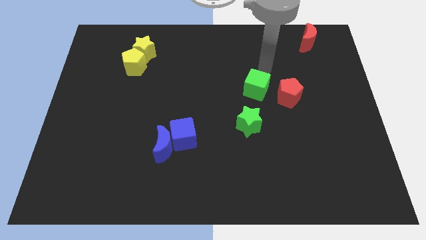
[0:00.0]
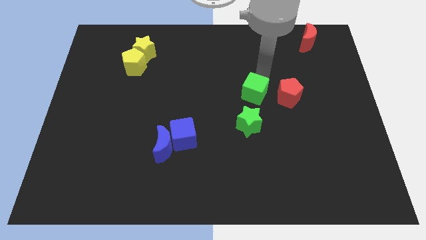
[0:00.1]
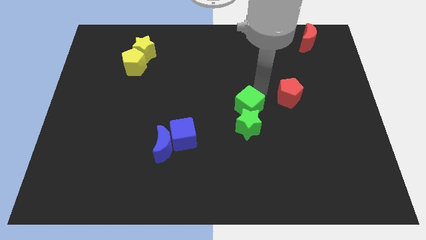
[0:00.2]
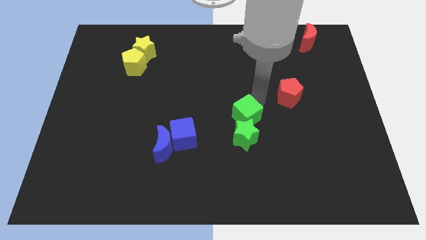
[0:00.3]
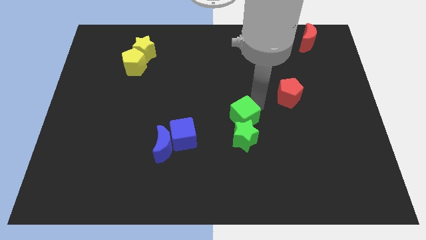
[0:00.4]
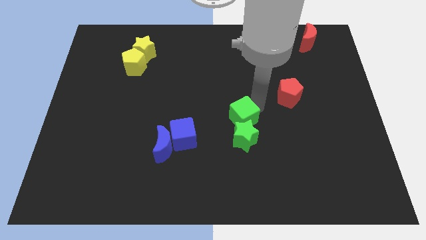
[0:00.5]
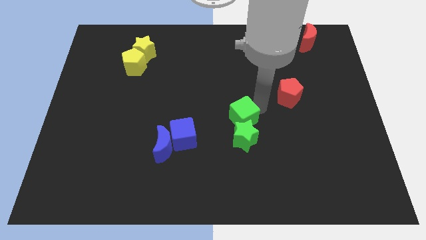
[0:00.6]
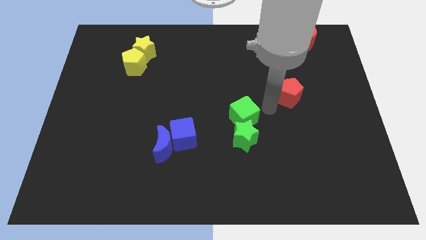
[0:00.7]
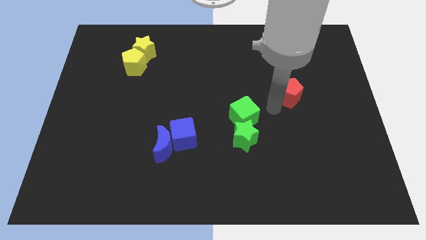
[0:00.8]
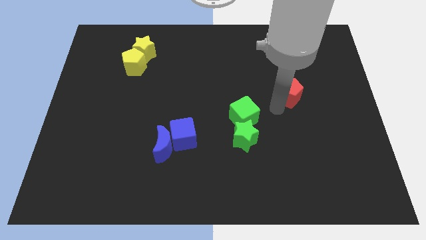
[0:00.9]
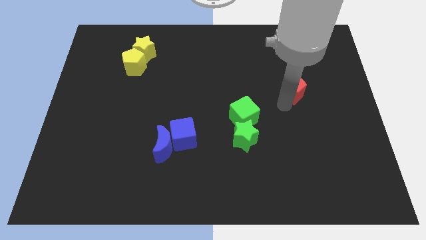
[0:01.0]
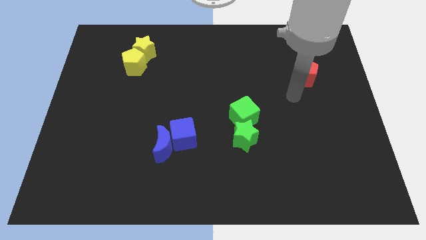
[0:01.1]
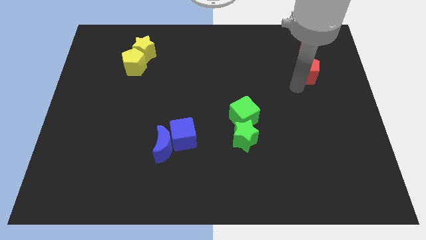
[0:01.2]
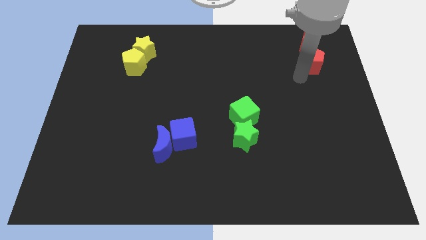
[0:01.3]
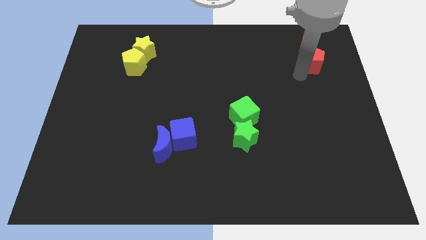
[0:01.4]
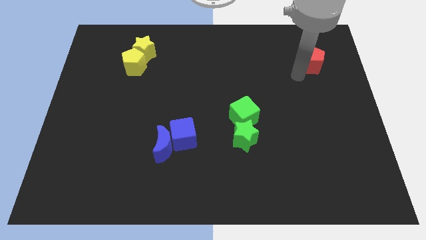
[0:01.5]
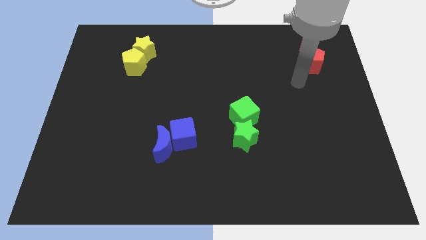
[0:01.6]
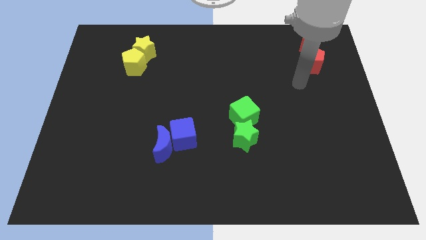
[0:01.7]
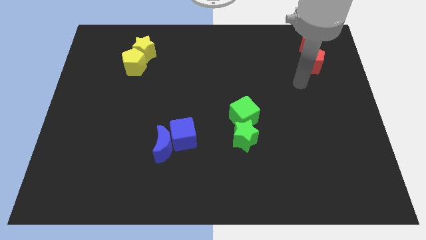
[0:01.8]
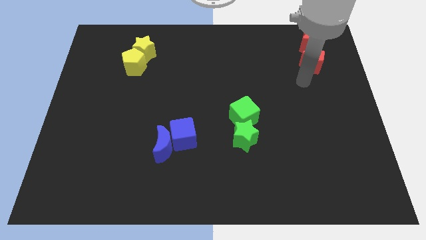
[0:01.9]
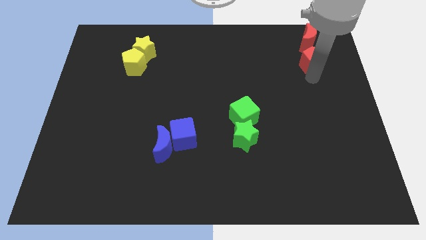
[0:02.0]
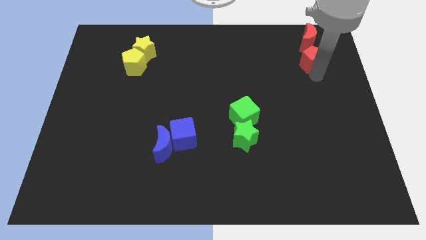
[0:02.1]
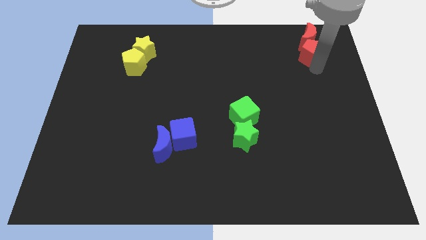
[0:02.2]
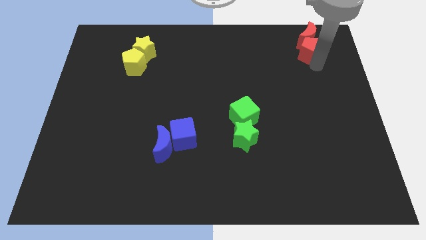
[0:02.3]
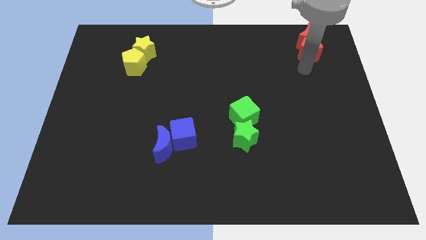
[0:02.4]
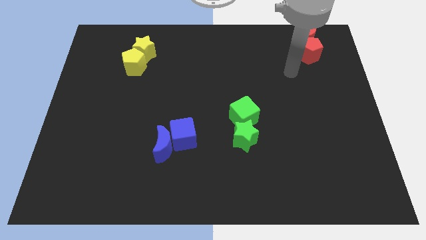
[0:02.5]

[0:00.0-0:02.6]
put the red pentagon into the red crescent

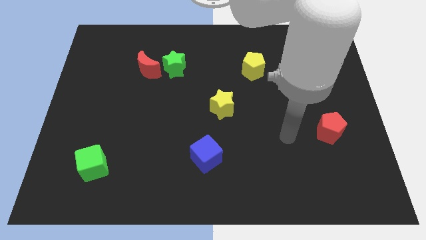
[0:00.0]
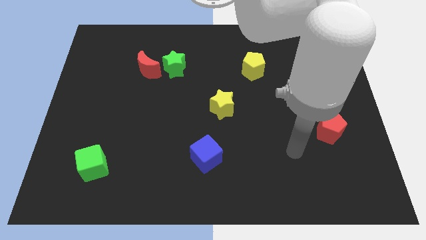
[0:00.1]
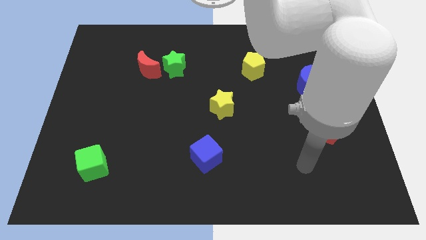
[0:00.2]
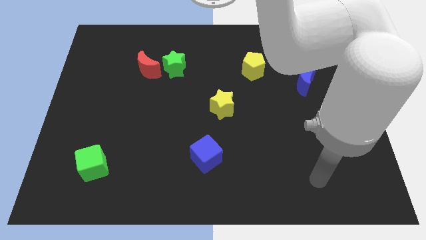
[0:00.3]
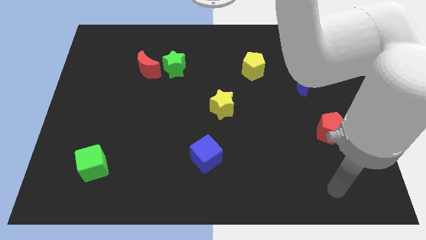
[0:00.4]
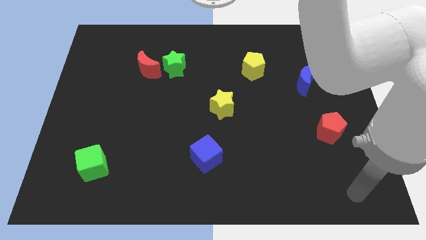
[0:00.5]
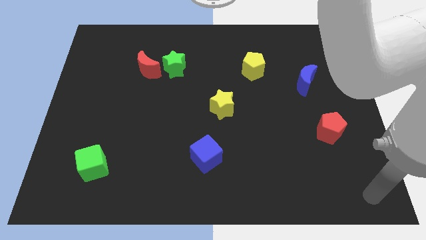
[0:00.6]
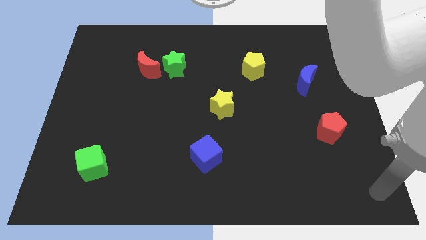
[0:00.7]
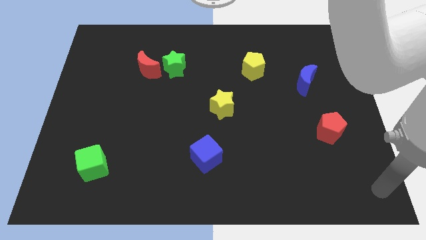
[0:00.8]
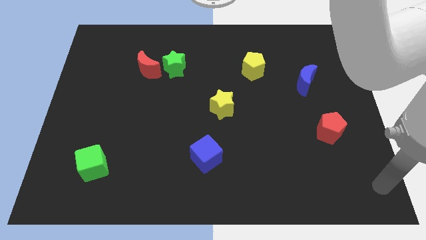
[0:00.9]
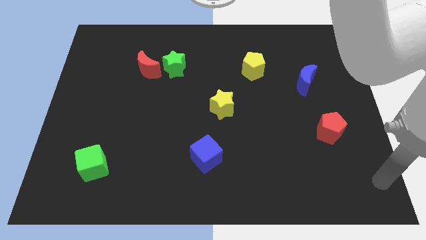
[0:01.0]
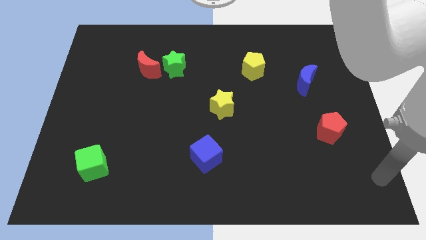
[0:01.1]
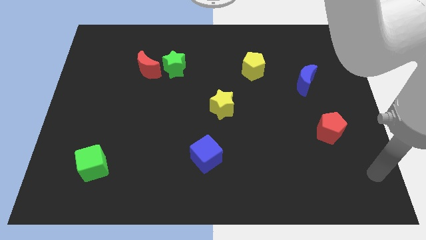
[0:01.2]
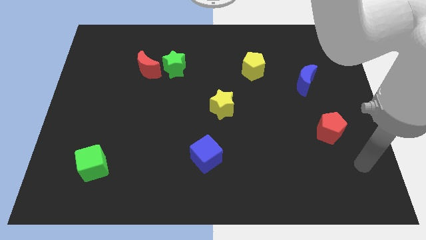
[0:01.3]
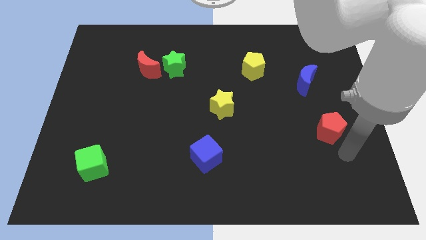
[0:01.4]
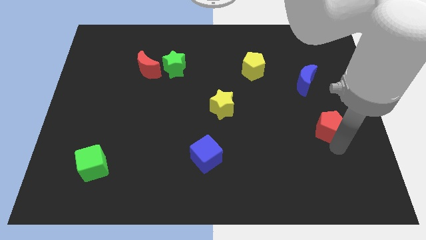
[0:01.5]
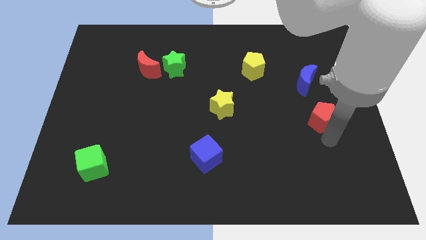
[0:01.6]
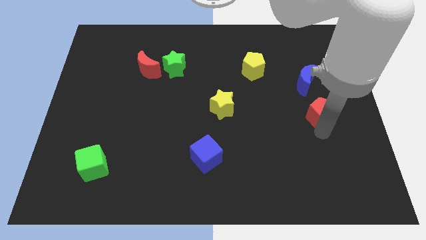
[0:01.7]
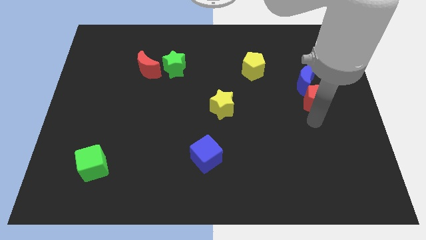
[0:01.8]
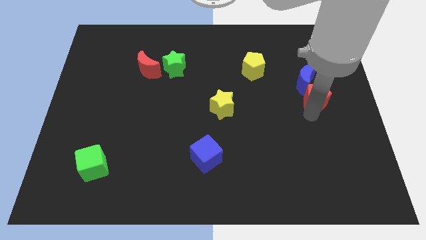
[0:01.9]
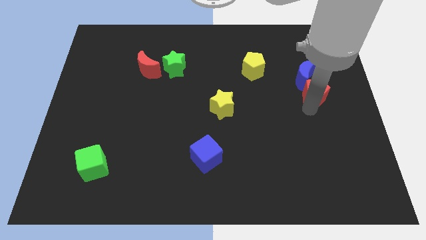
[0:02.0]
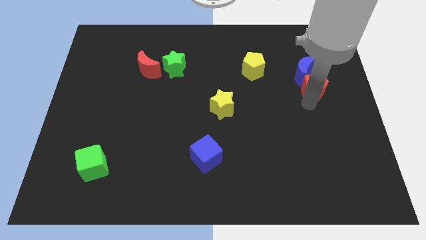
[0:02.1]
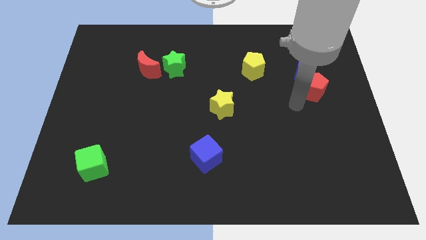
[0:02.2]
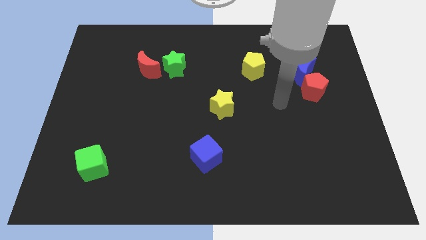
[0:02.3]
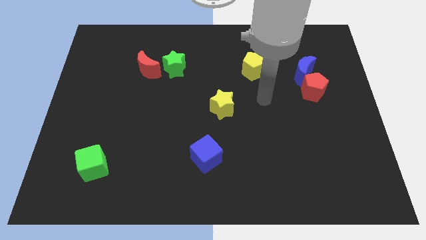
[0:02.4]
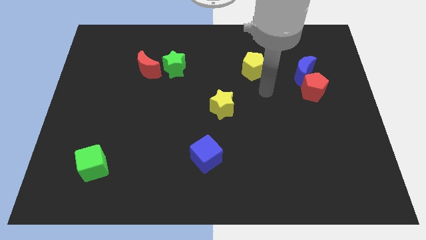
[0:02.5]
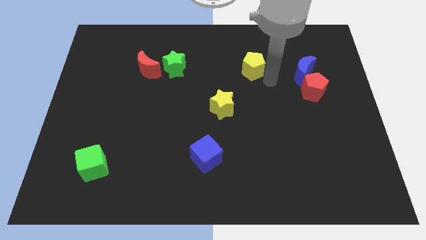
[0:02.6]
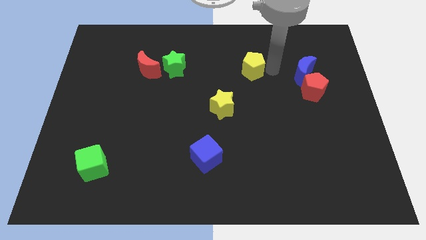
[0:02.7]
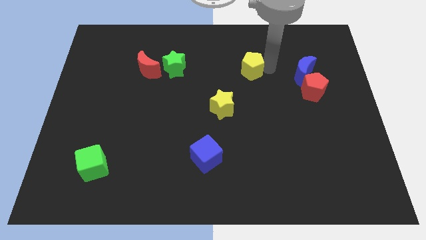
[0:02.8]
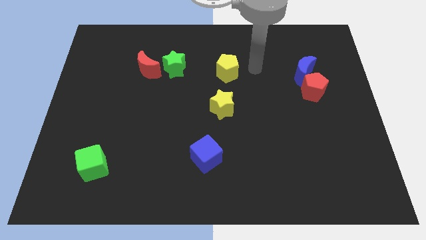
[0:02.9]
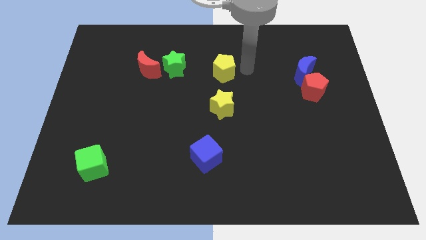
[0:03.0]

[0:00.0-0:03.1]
move the red pentagon below the blue moon

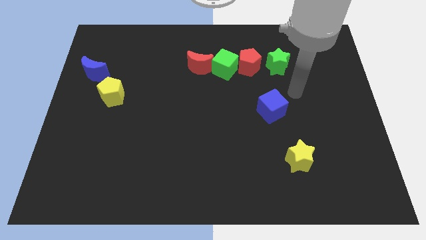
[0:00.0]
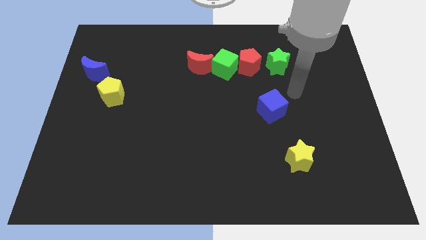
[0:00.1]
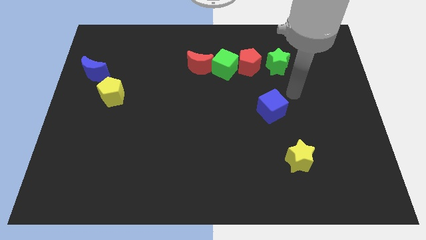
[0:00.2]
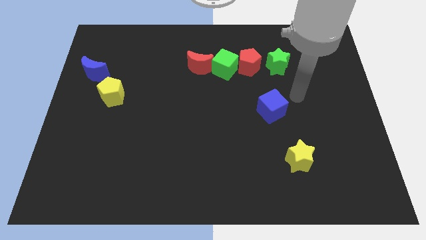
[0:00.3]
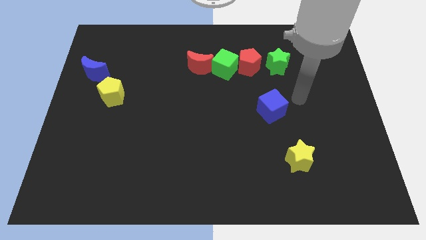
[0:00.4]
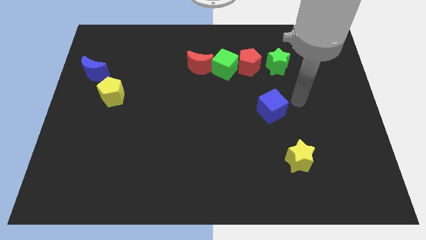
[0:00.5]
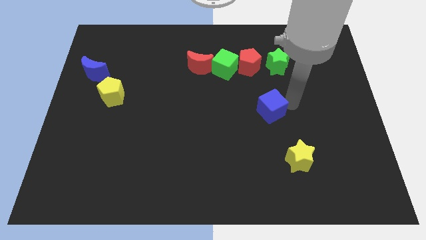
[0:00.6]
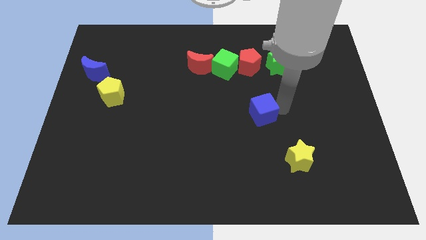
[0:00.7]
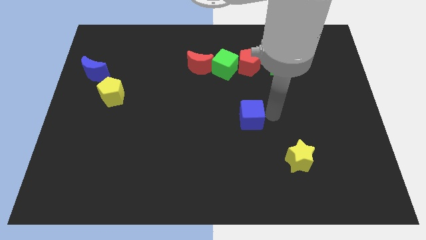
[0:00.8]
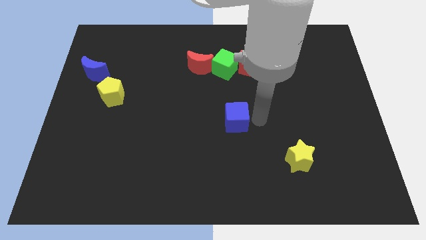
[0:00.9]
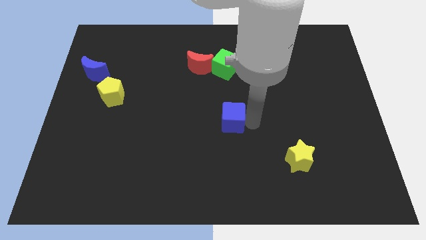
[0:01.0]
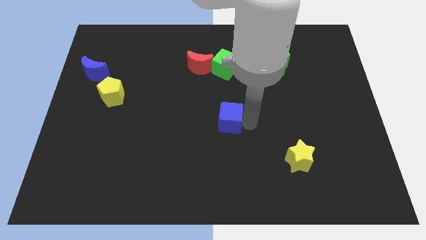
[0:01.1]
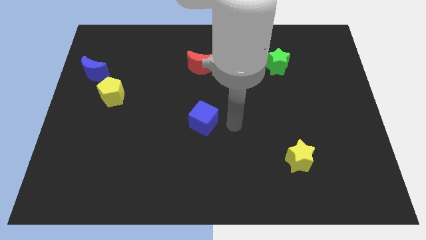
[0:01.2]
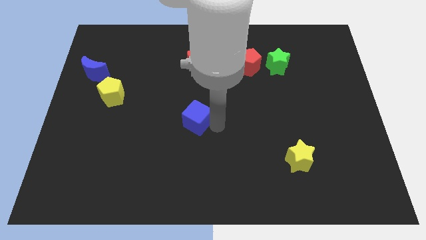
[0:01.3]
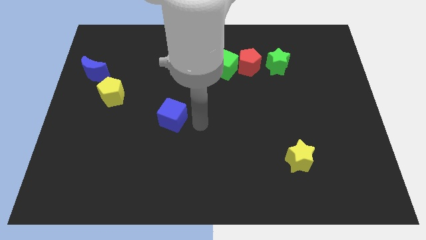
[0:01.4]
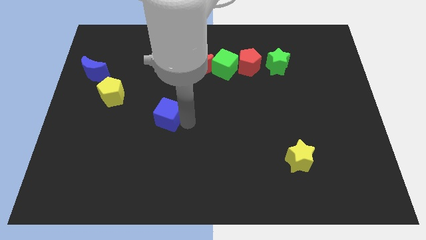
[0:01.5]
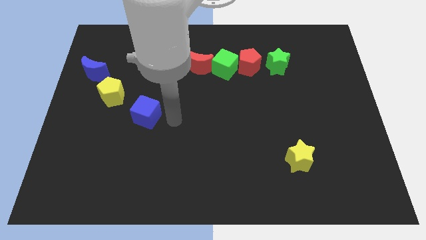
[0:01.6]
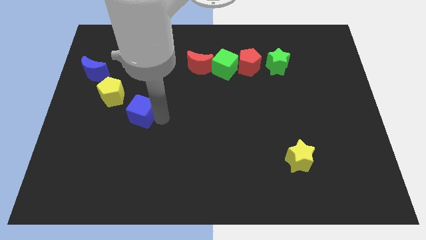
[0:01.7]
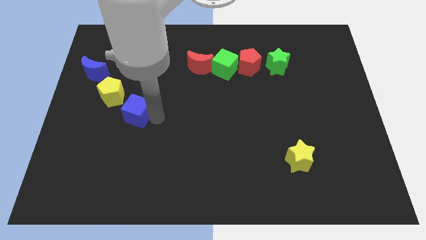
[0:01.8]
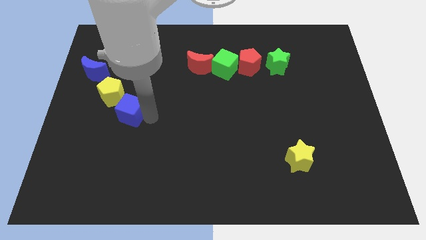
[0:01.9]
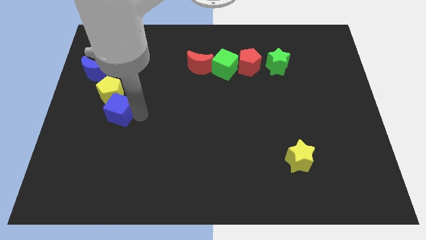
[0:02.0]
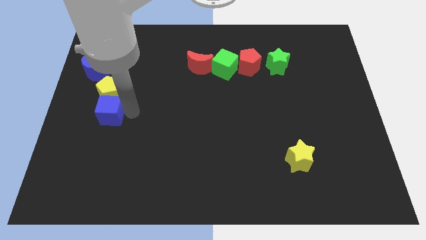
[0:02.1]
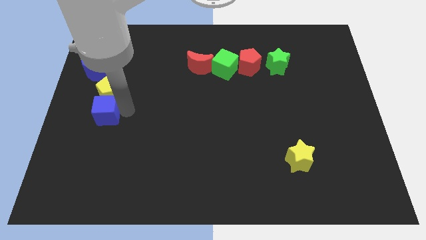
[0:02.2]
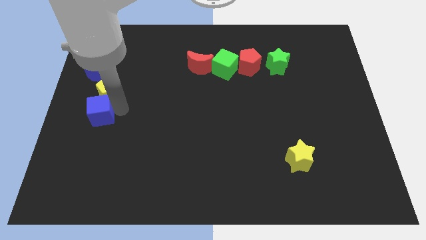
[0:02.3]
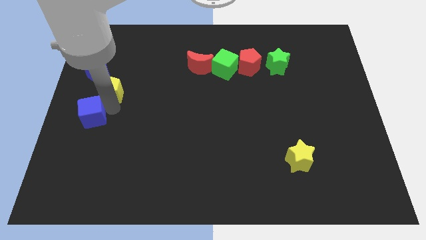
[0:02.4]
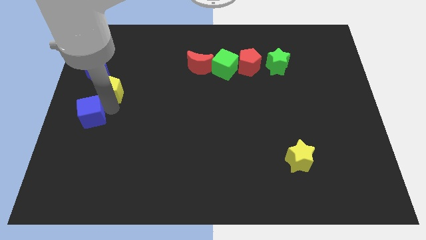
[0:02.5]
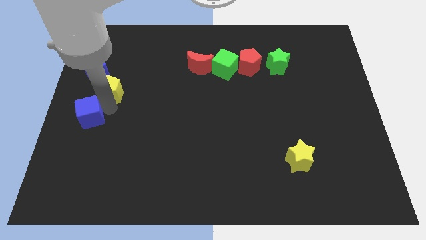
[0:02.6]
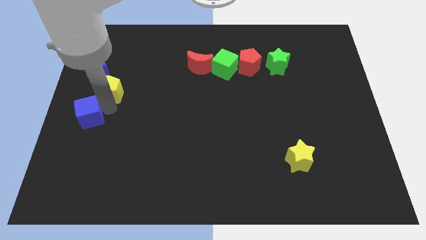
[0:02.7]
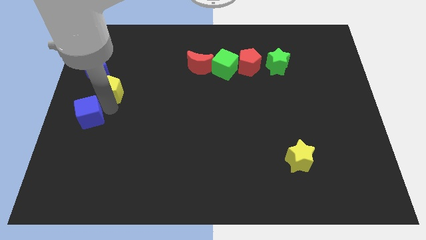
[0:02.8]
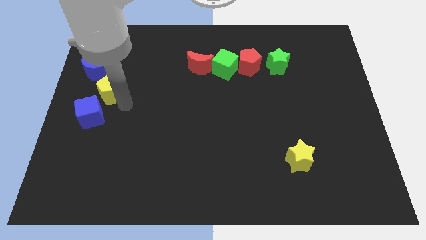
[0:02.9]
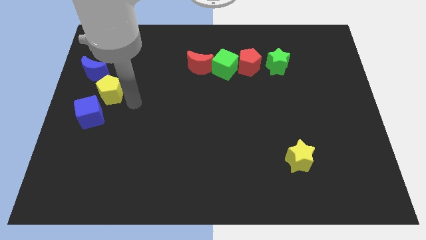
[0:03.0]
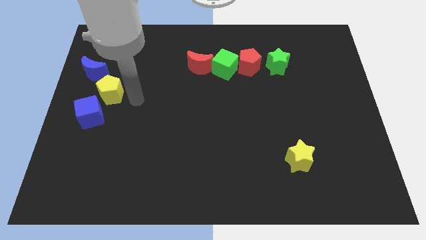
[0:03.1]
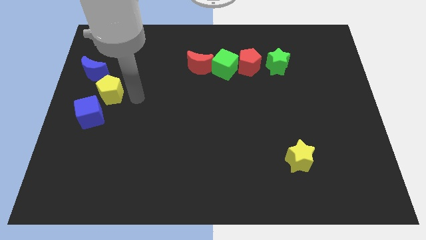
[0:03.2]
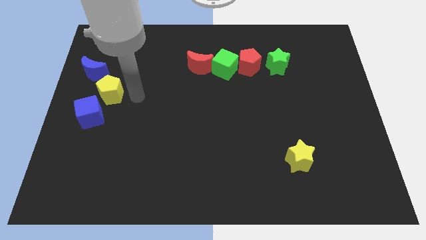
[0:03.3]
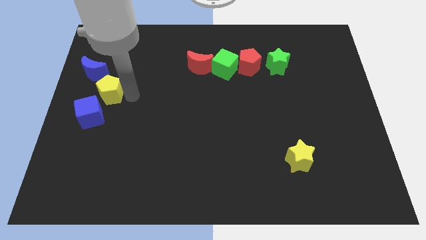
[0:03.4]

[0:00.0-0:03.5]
move the blue cube diagonally to the yellow pentagon
